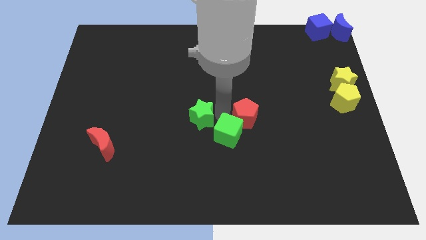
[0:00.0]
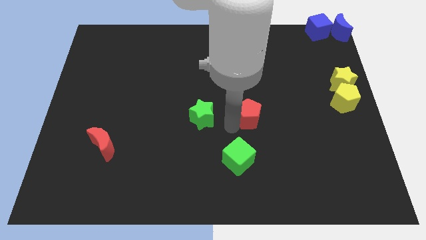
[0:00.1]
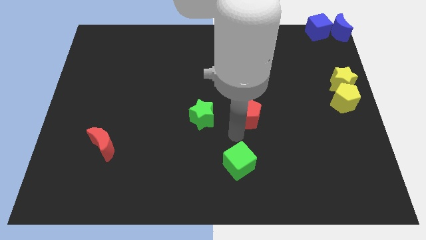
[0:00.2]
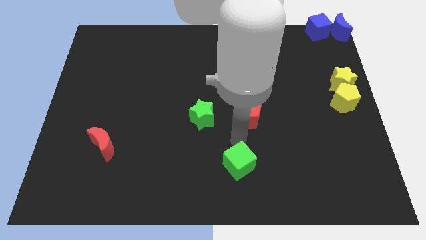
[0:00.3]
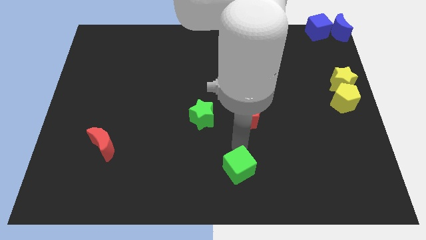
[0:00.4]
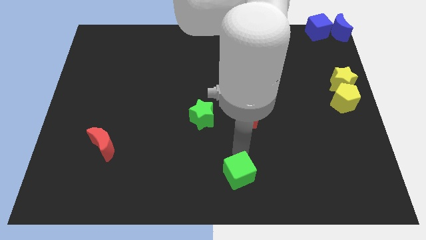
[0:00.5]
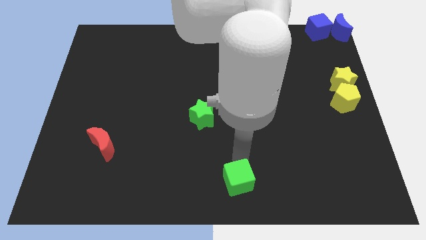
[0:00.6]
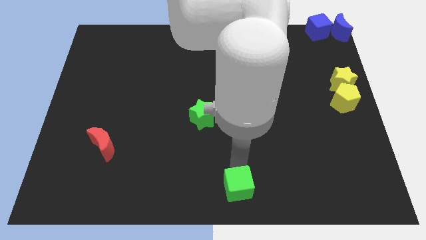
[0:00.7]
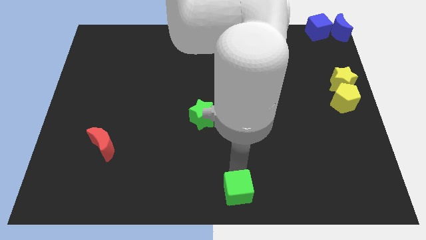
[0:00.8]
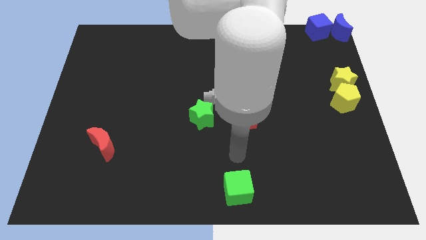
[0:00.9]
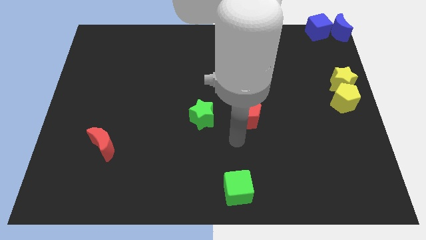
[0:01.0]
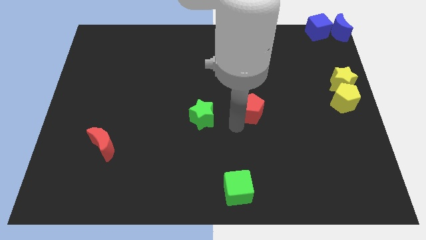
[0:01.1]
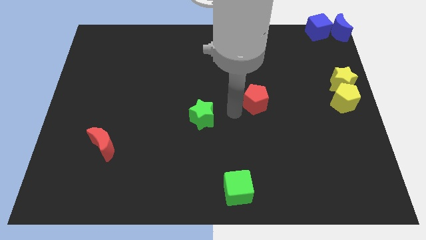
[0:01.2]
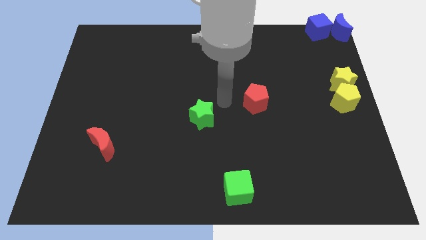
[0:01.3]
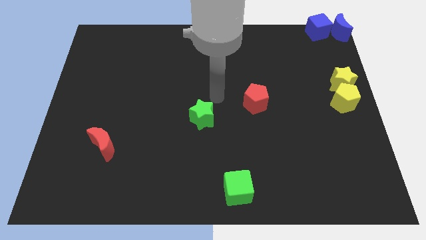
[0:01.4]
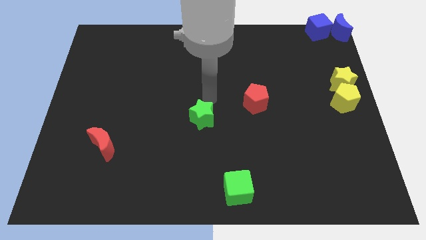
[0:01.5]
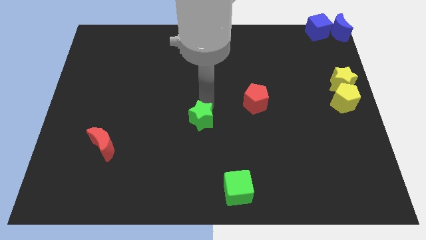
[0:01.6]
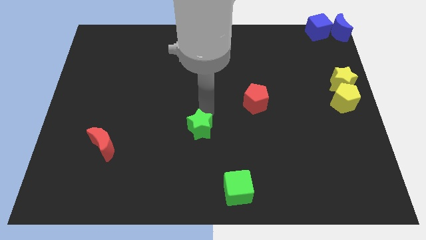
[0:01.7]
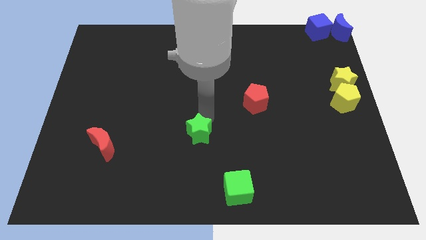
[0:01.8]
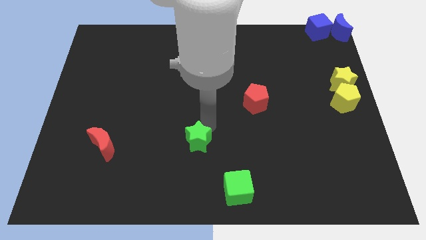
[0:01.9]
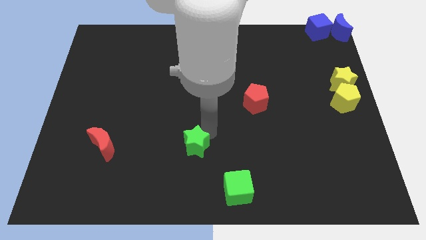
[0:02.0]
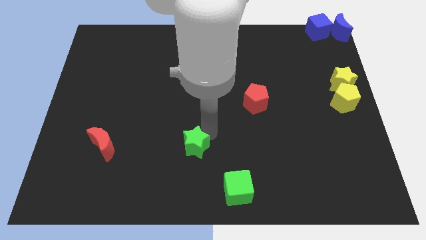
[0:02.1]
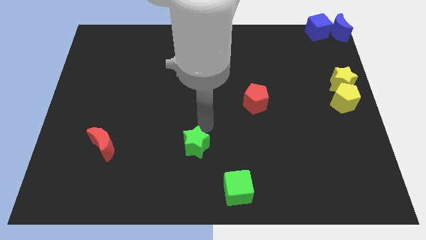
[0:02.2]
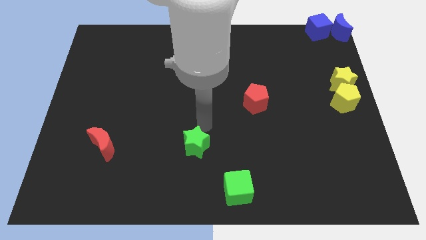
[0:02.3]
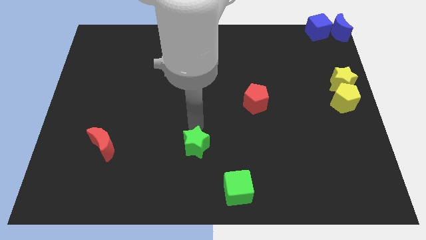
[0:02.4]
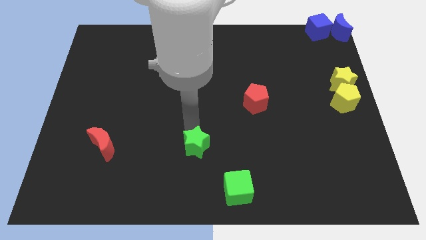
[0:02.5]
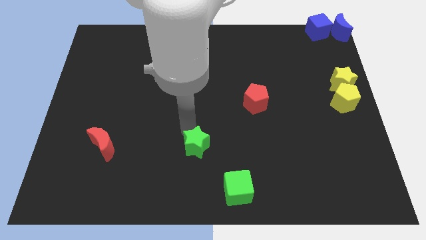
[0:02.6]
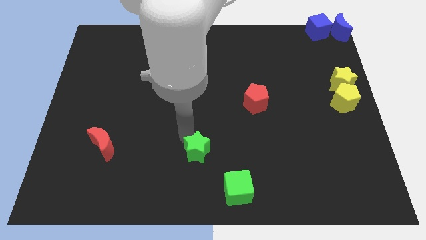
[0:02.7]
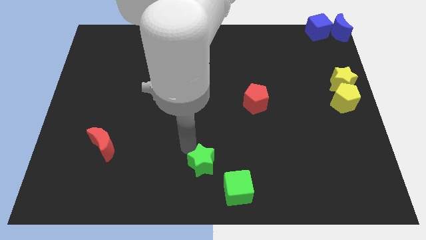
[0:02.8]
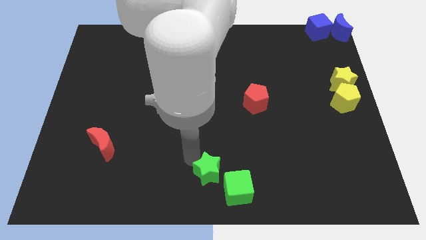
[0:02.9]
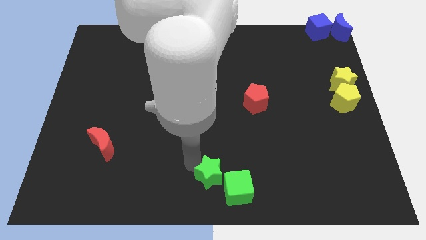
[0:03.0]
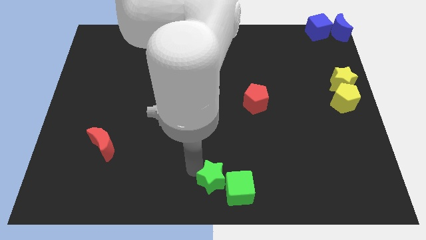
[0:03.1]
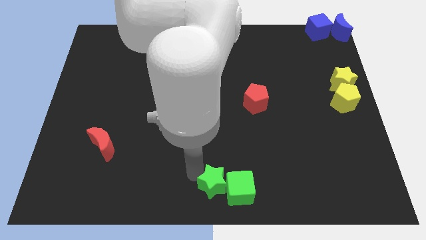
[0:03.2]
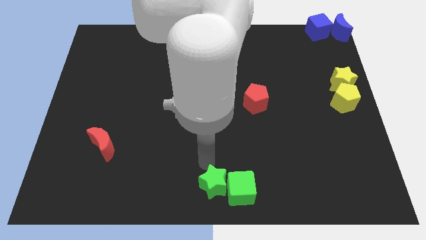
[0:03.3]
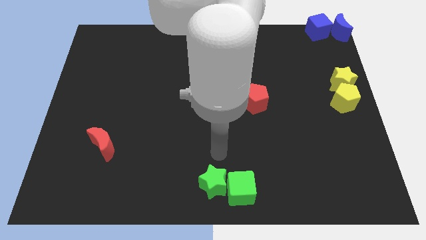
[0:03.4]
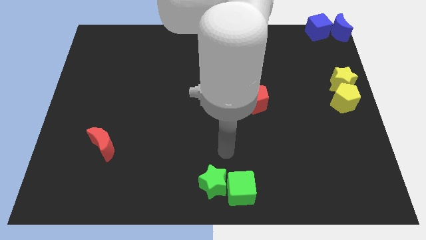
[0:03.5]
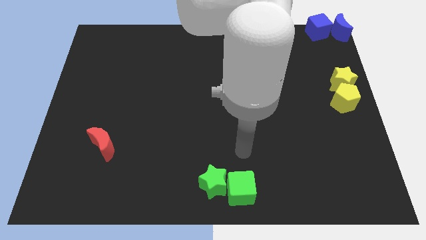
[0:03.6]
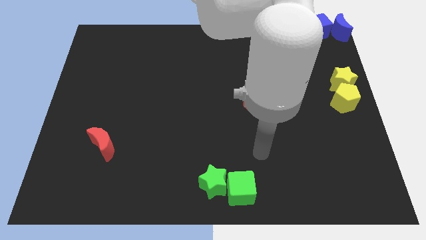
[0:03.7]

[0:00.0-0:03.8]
push both the green blocks to the bottom center of the board

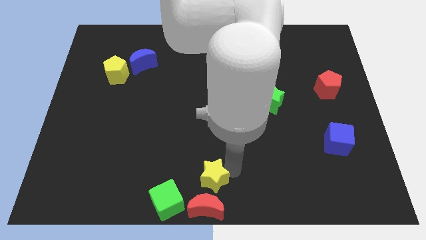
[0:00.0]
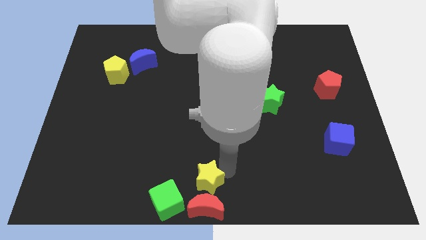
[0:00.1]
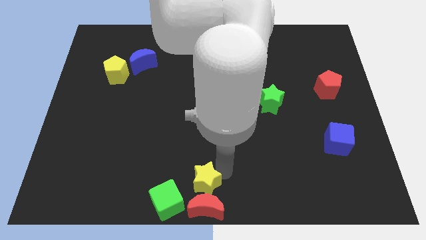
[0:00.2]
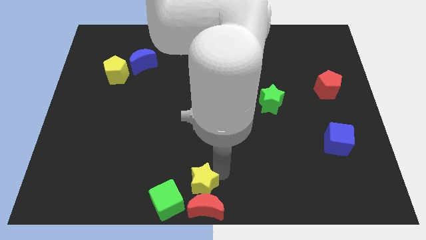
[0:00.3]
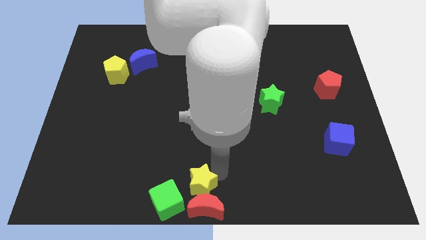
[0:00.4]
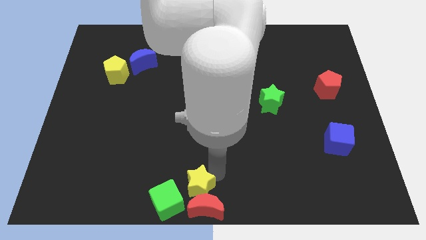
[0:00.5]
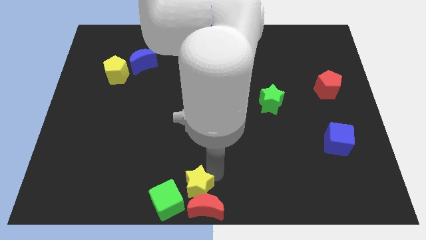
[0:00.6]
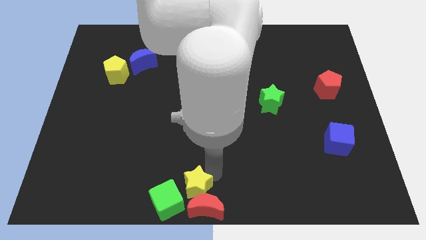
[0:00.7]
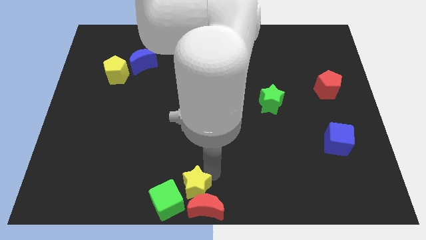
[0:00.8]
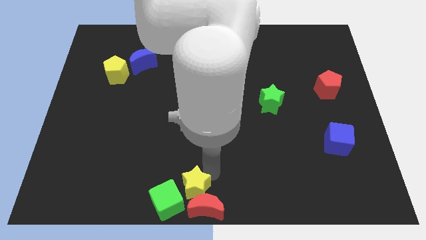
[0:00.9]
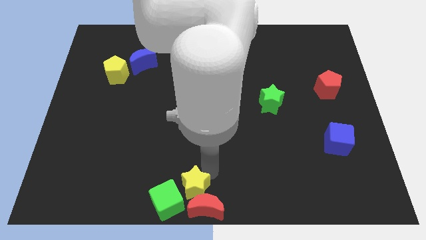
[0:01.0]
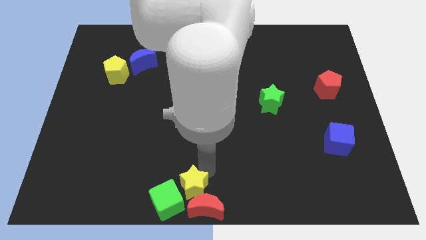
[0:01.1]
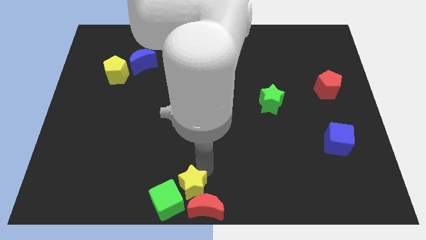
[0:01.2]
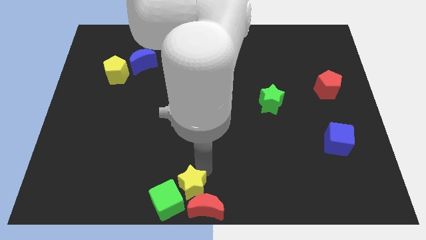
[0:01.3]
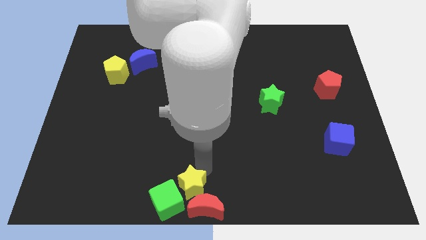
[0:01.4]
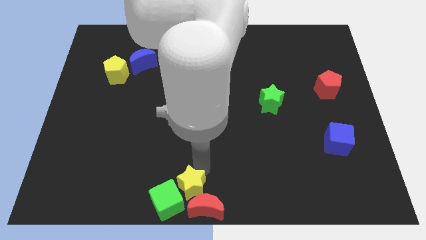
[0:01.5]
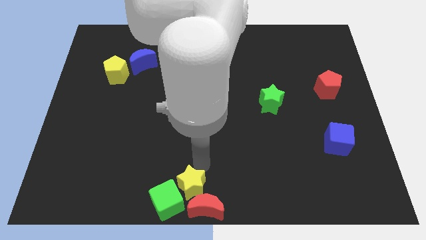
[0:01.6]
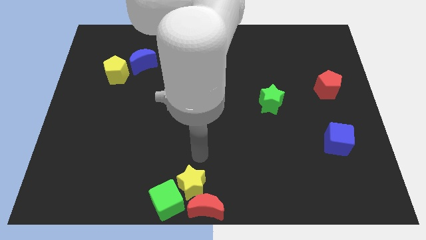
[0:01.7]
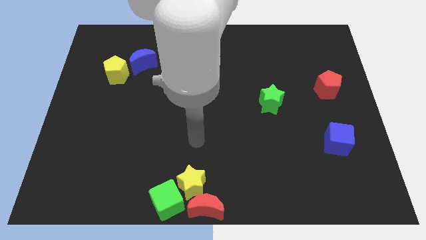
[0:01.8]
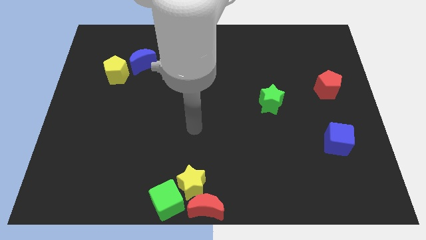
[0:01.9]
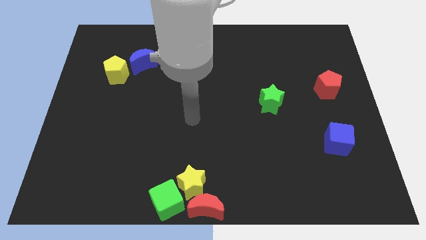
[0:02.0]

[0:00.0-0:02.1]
place the yellow star towards the top left side of red crescent

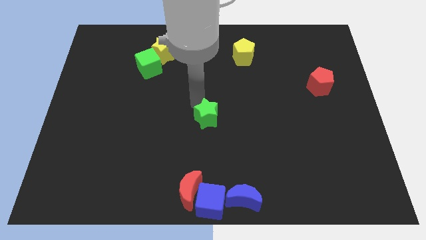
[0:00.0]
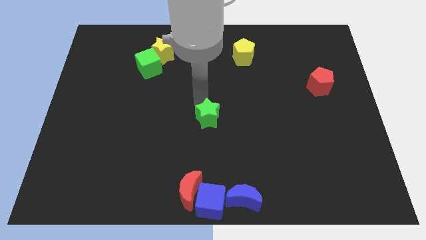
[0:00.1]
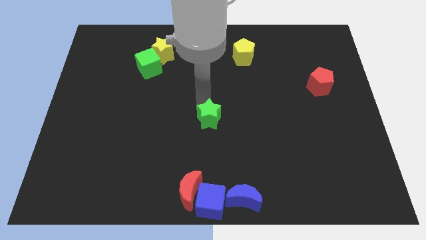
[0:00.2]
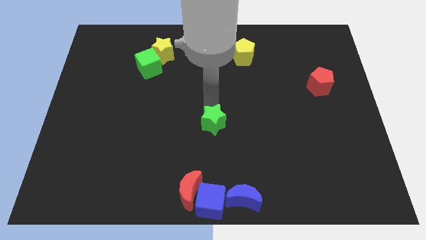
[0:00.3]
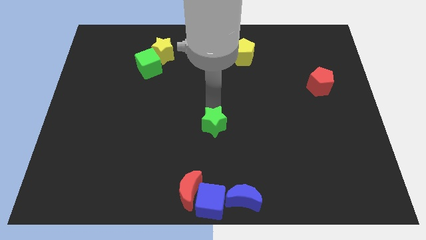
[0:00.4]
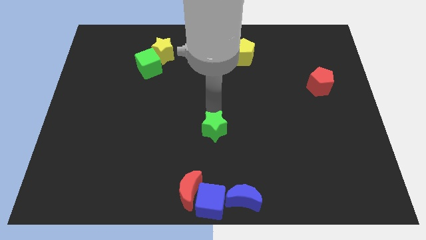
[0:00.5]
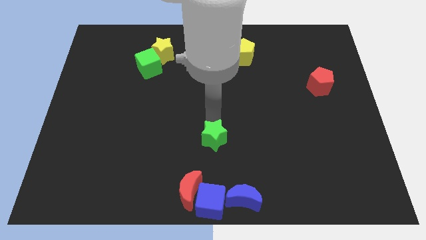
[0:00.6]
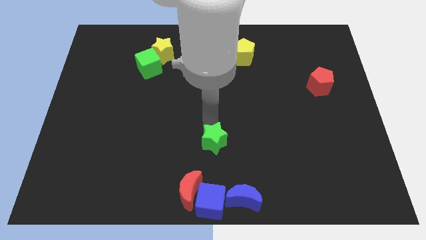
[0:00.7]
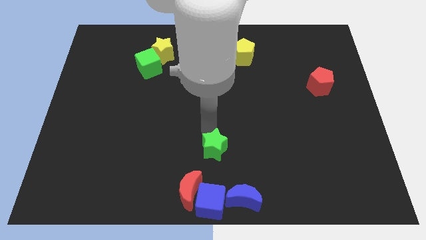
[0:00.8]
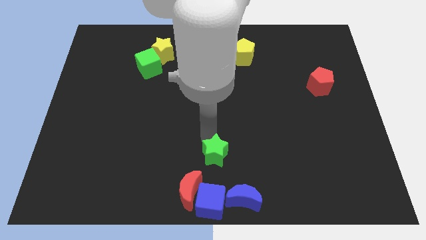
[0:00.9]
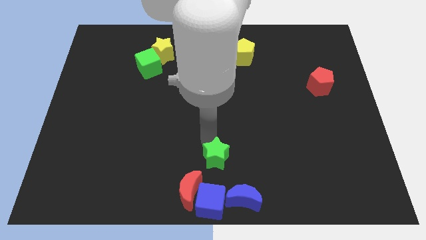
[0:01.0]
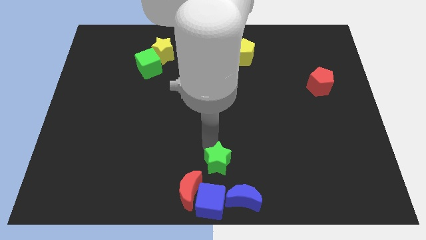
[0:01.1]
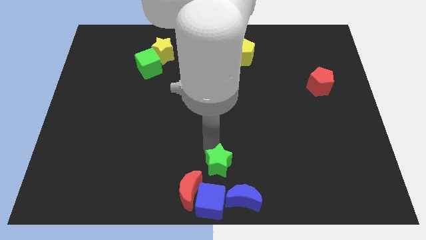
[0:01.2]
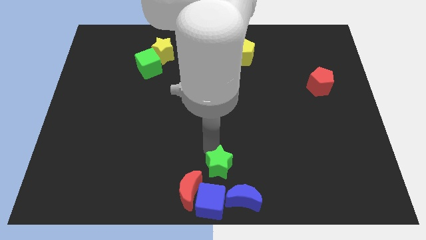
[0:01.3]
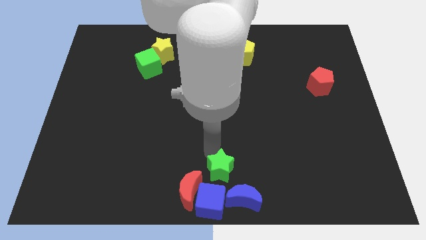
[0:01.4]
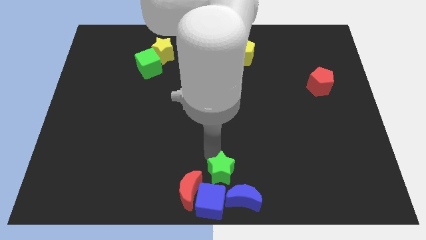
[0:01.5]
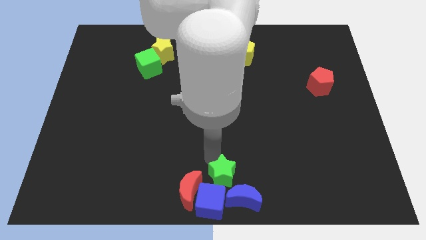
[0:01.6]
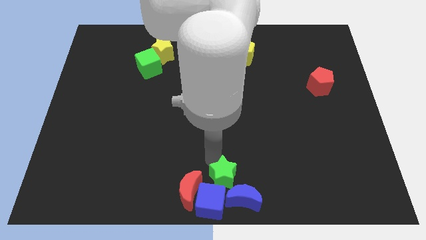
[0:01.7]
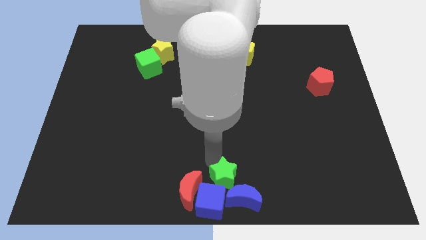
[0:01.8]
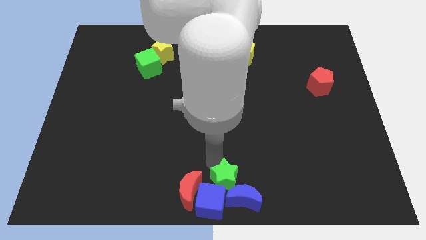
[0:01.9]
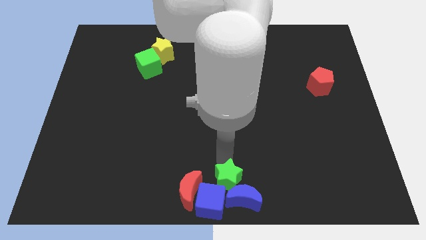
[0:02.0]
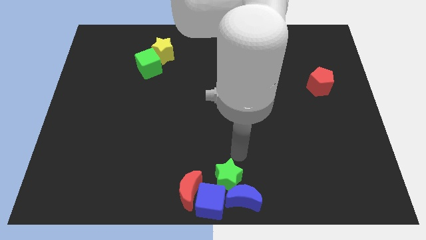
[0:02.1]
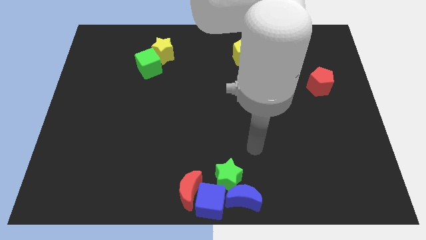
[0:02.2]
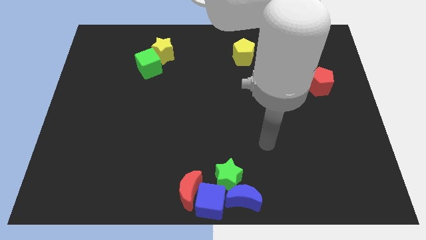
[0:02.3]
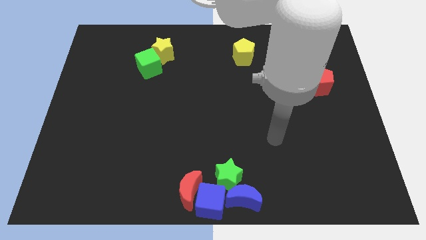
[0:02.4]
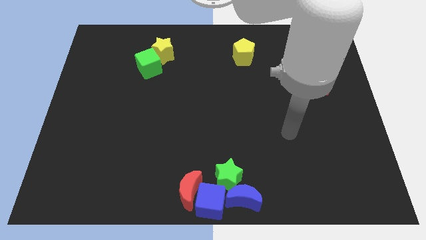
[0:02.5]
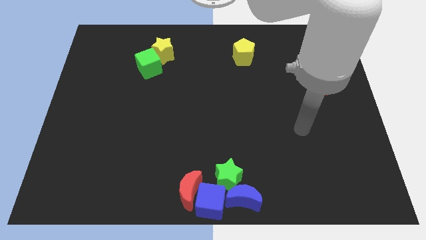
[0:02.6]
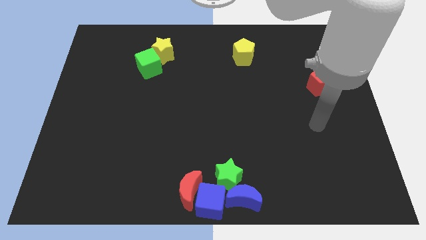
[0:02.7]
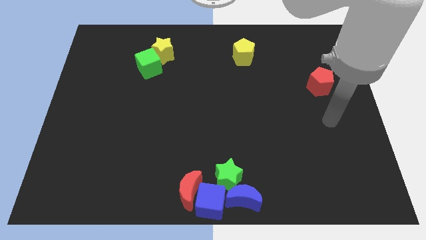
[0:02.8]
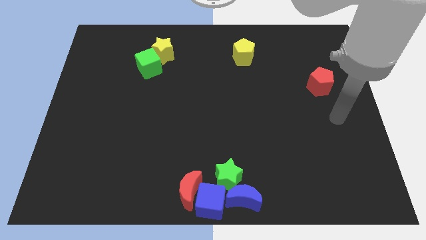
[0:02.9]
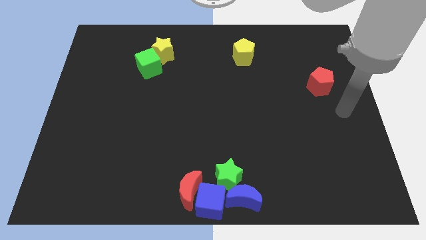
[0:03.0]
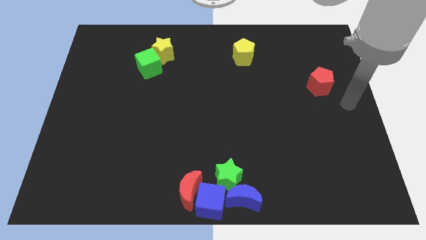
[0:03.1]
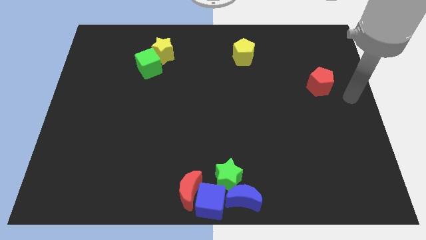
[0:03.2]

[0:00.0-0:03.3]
push the green star on top of the blue blocks
